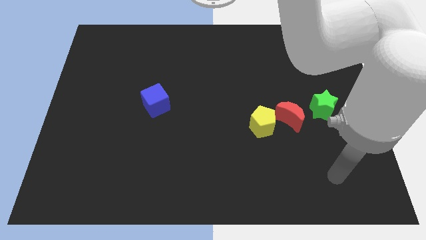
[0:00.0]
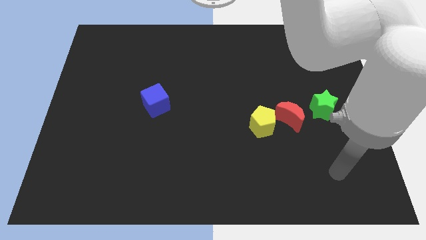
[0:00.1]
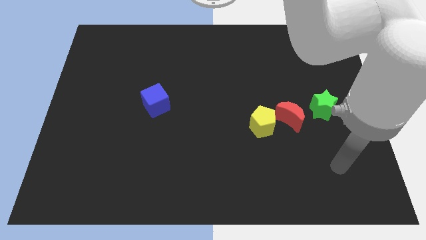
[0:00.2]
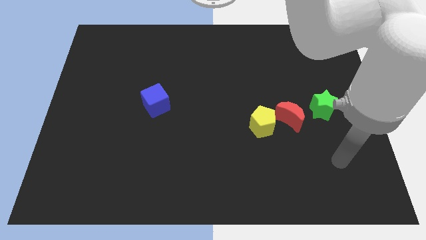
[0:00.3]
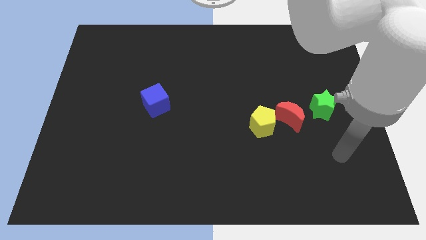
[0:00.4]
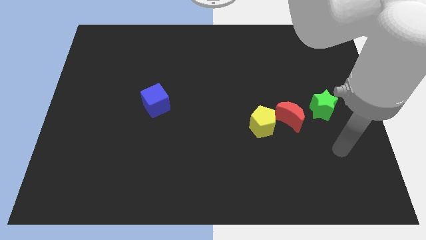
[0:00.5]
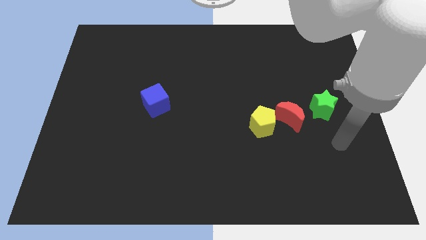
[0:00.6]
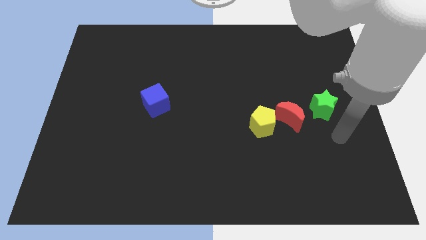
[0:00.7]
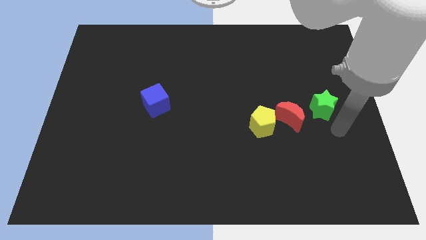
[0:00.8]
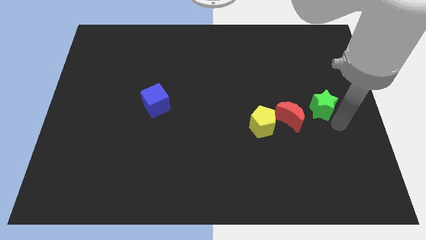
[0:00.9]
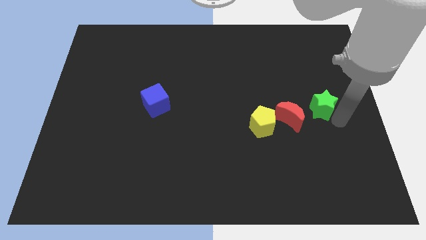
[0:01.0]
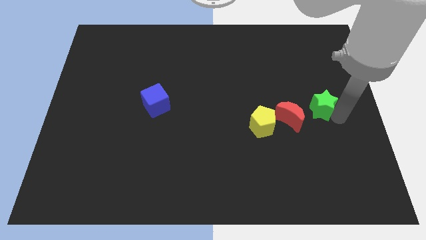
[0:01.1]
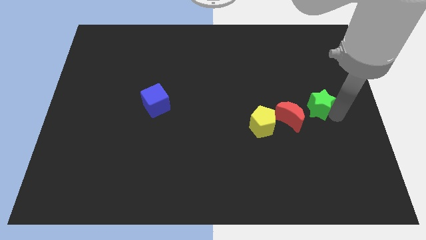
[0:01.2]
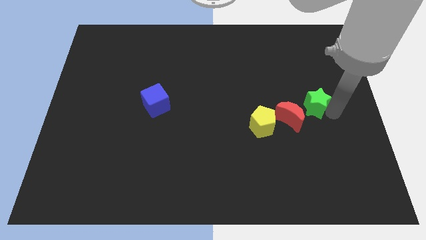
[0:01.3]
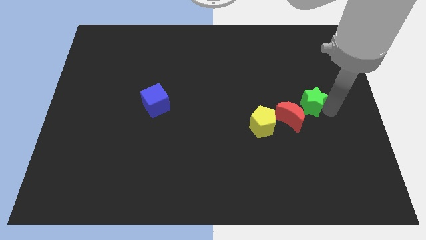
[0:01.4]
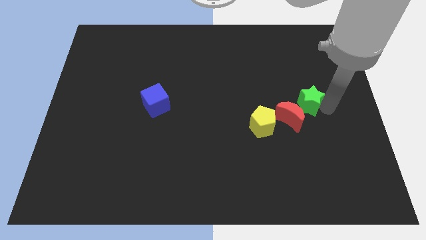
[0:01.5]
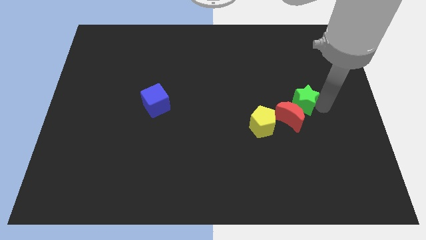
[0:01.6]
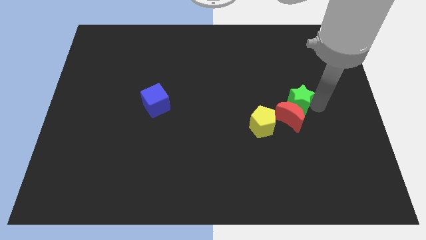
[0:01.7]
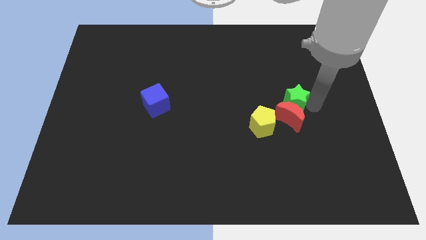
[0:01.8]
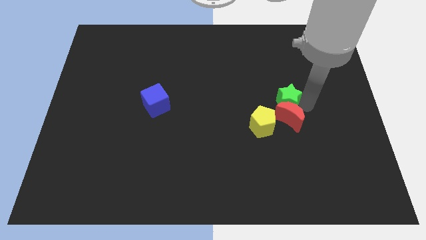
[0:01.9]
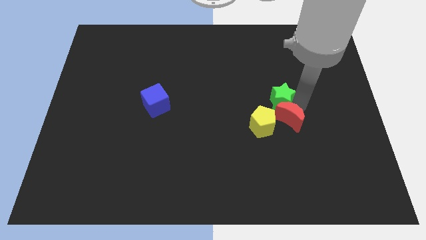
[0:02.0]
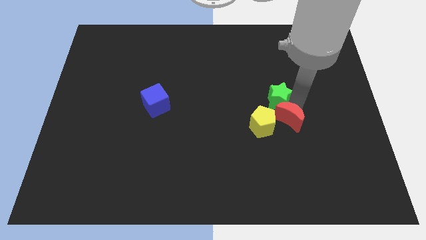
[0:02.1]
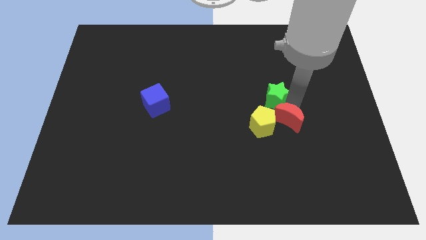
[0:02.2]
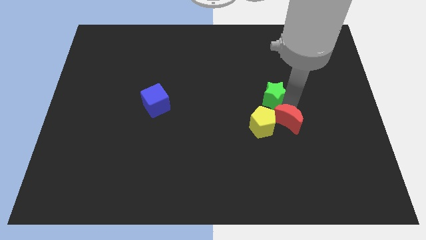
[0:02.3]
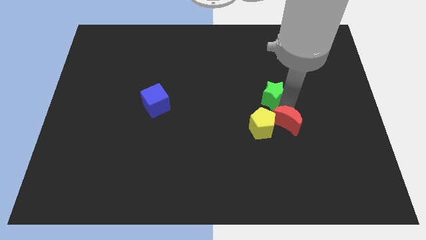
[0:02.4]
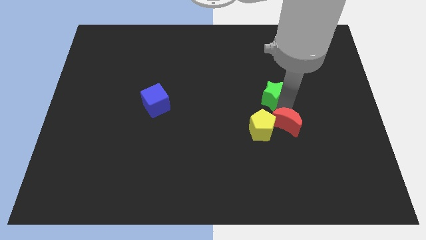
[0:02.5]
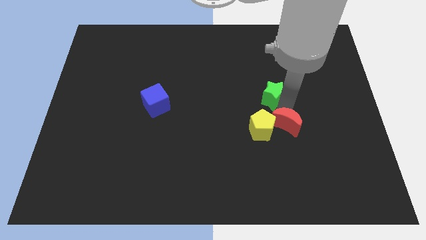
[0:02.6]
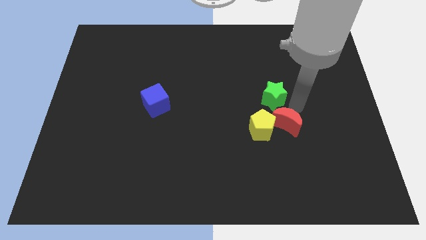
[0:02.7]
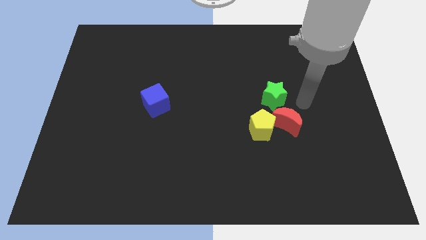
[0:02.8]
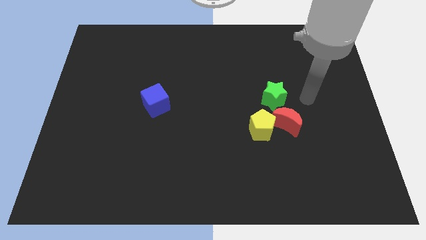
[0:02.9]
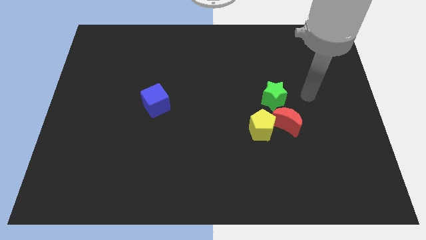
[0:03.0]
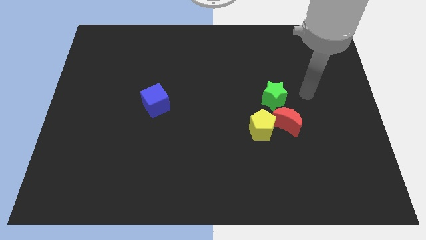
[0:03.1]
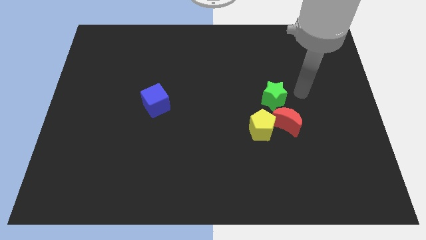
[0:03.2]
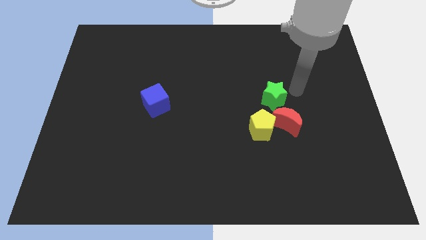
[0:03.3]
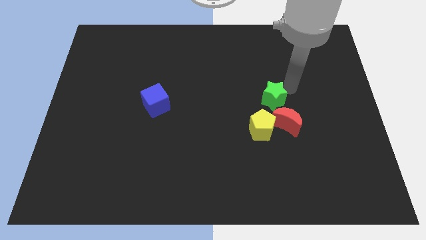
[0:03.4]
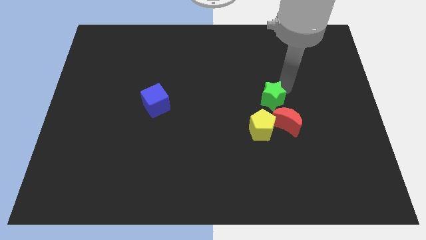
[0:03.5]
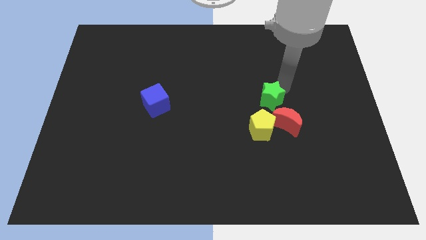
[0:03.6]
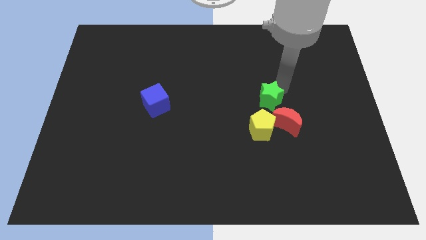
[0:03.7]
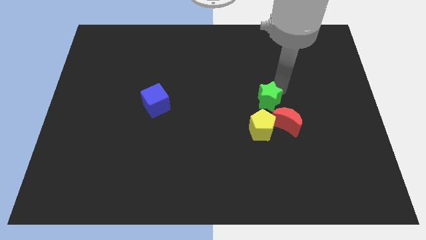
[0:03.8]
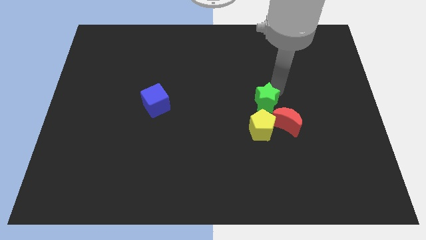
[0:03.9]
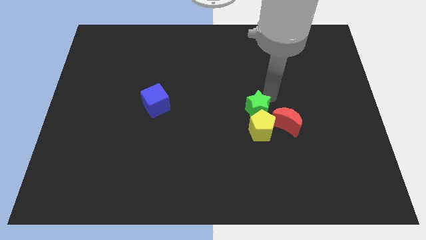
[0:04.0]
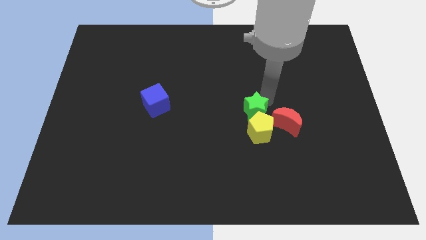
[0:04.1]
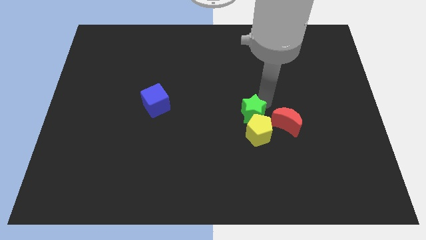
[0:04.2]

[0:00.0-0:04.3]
move the green star close to the yellow block

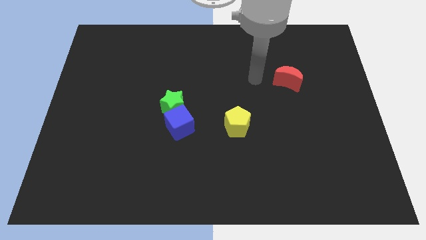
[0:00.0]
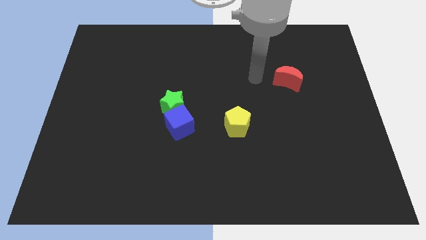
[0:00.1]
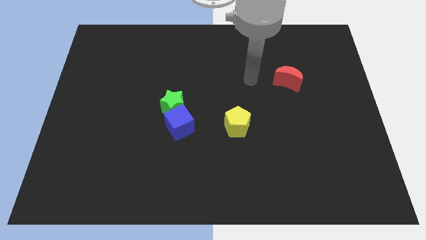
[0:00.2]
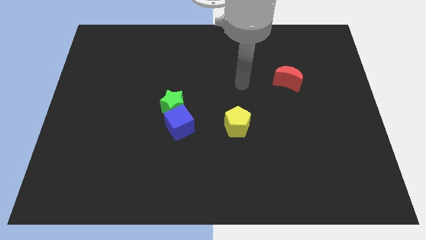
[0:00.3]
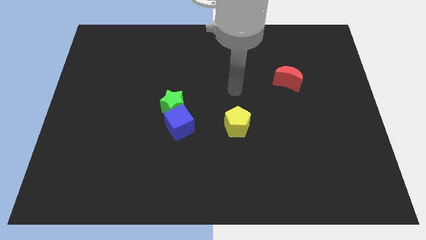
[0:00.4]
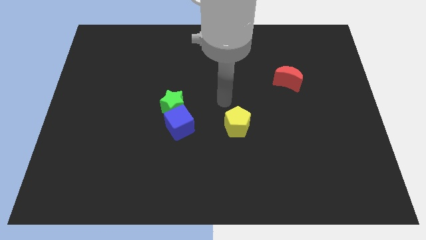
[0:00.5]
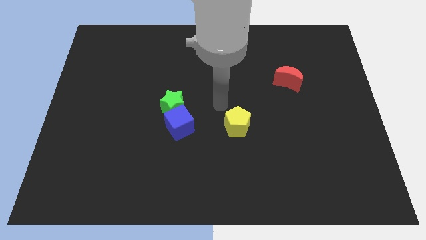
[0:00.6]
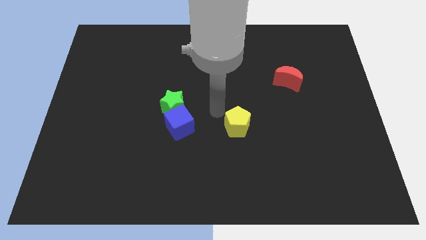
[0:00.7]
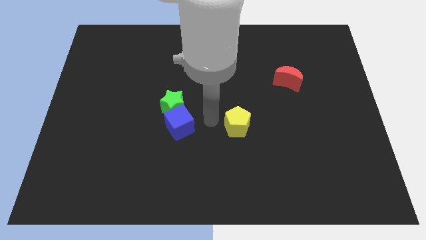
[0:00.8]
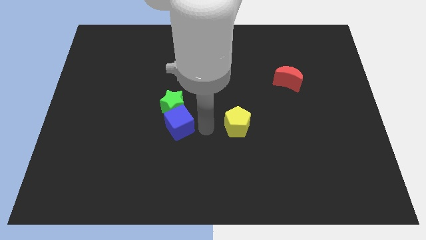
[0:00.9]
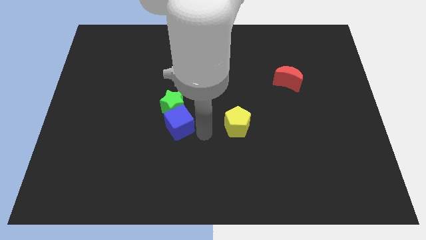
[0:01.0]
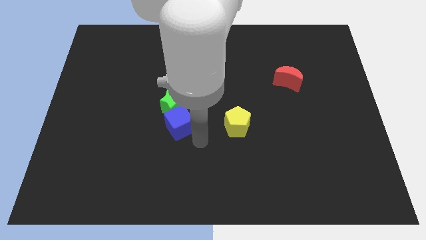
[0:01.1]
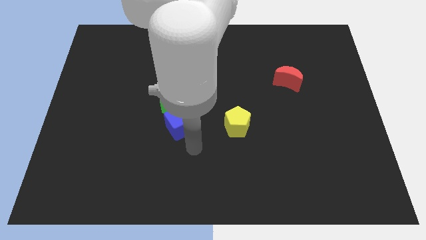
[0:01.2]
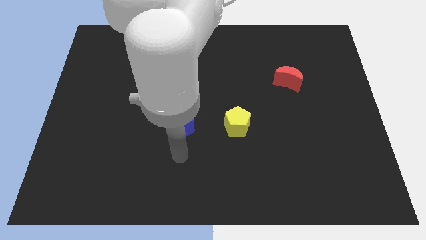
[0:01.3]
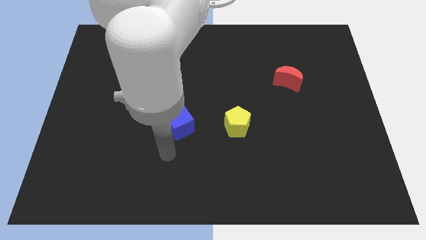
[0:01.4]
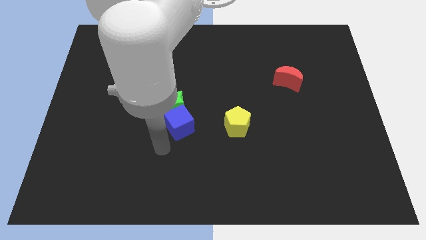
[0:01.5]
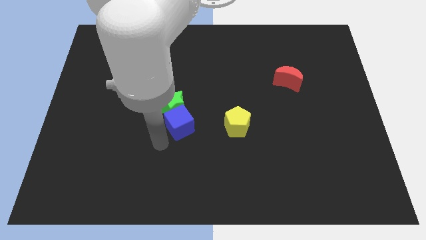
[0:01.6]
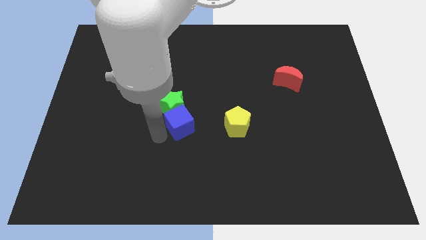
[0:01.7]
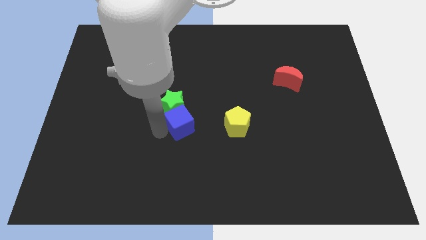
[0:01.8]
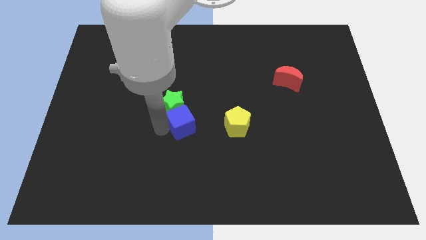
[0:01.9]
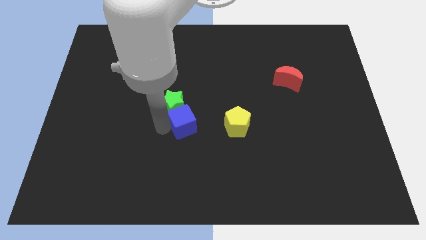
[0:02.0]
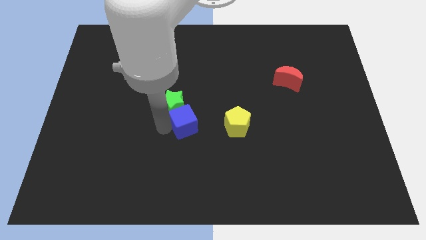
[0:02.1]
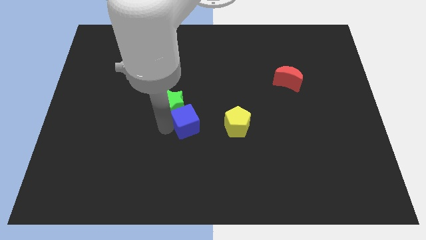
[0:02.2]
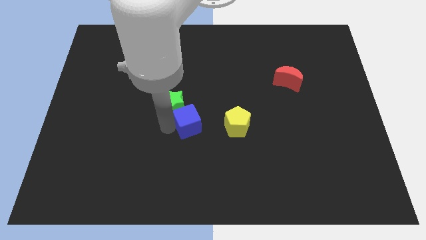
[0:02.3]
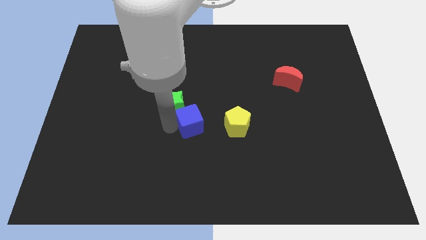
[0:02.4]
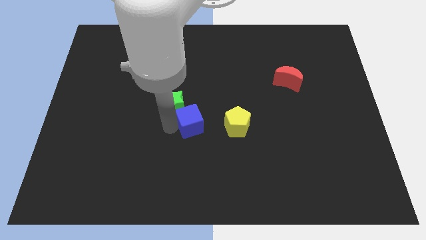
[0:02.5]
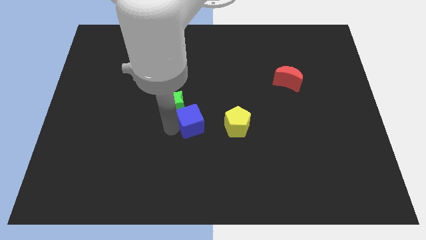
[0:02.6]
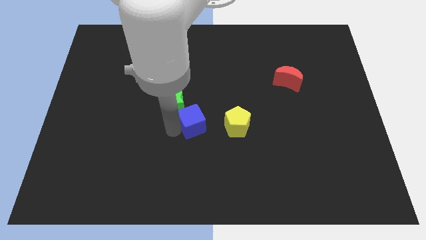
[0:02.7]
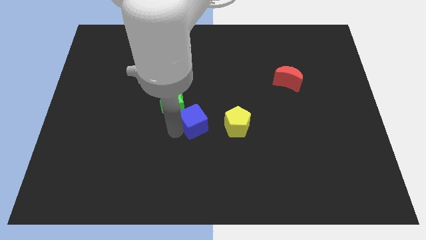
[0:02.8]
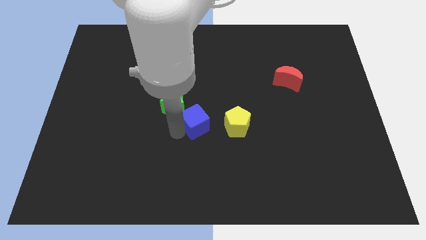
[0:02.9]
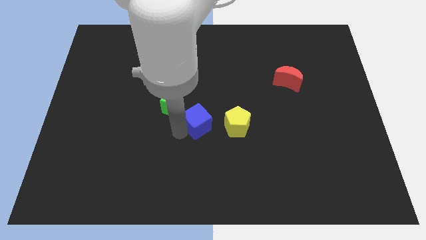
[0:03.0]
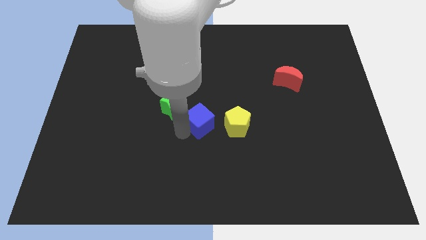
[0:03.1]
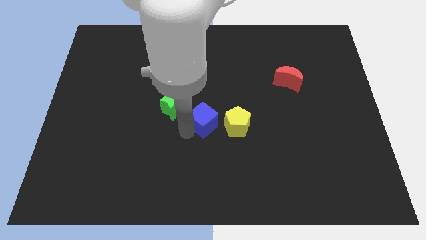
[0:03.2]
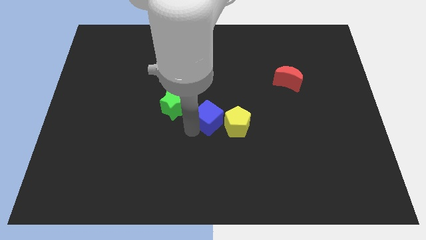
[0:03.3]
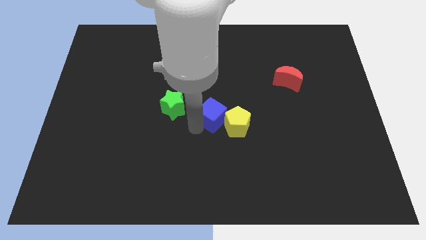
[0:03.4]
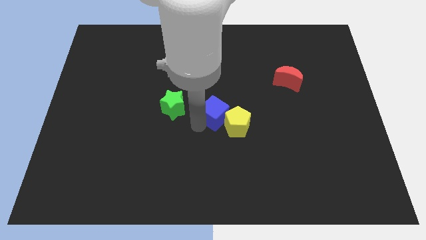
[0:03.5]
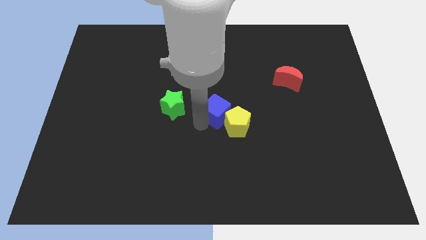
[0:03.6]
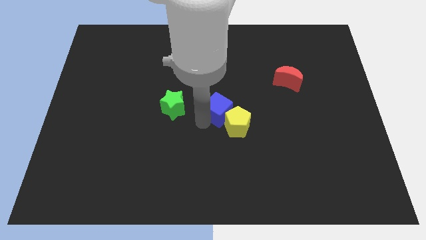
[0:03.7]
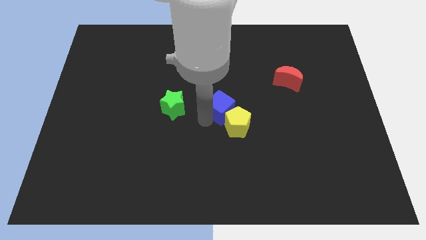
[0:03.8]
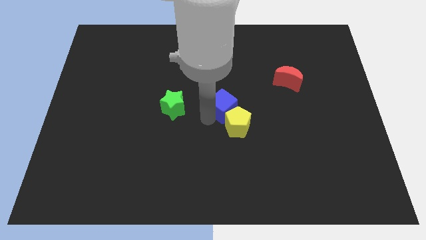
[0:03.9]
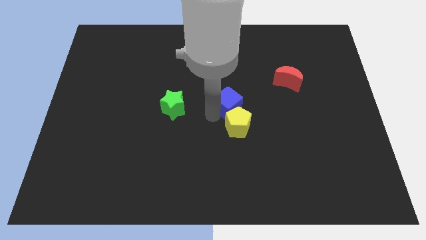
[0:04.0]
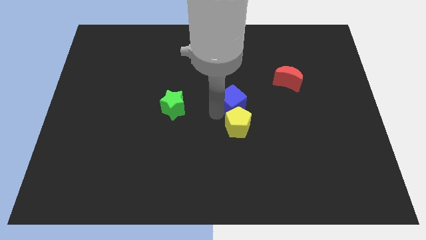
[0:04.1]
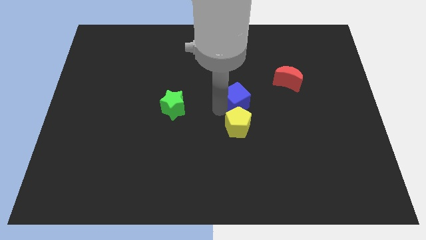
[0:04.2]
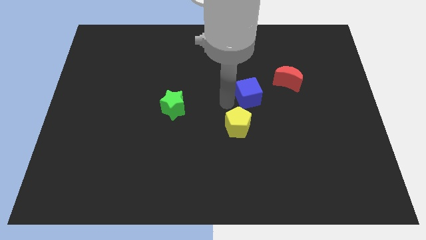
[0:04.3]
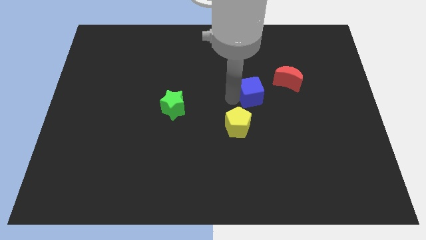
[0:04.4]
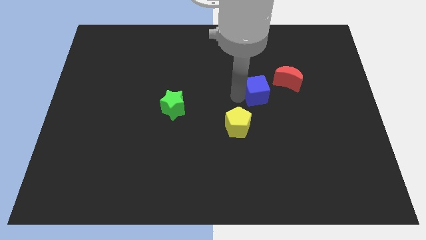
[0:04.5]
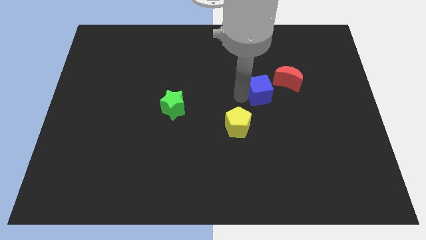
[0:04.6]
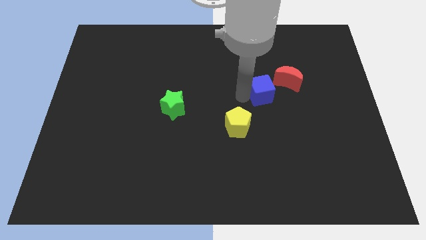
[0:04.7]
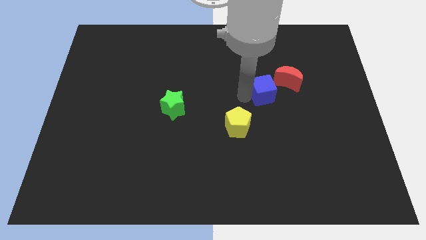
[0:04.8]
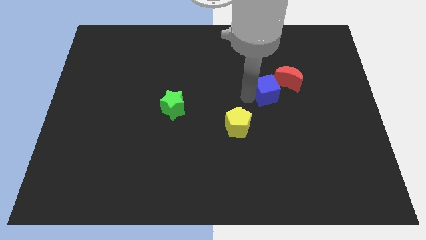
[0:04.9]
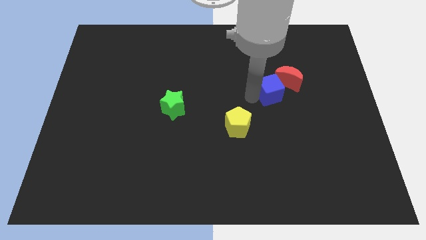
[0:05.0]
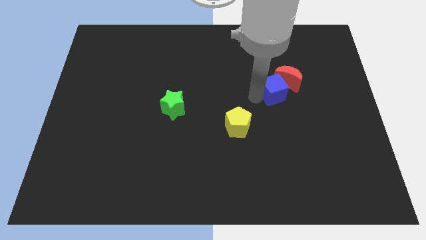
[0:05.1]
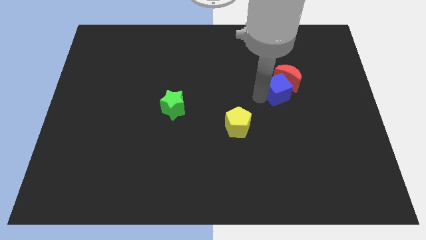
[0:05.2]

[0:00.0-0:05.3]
put the blue block to the moon
